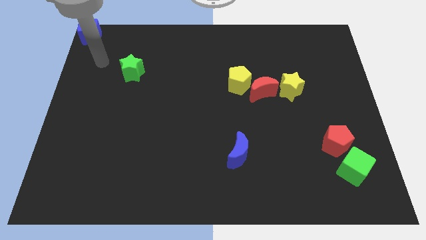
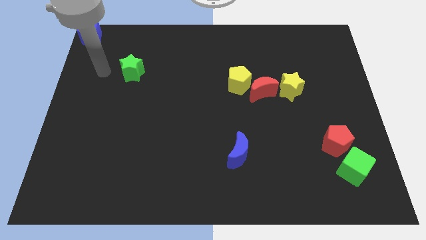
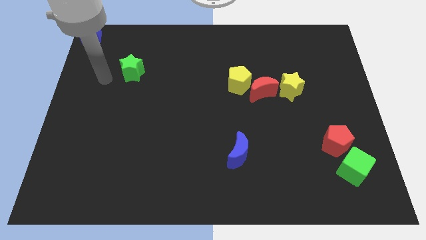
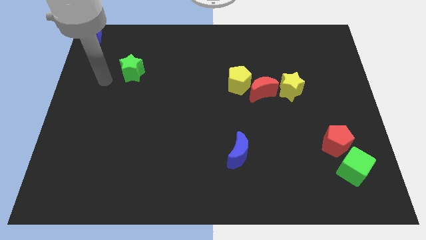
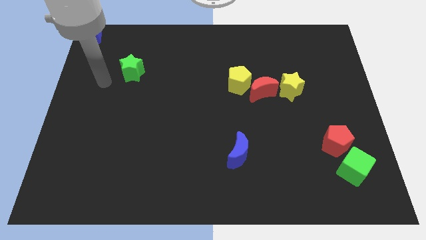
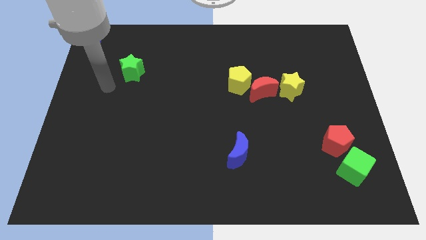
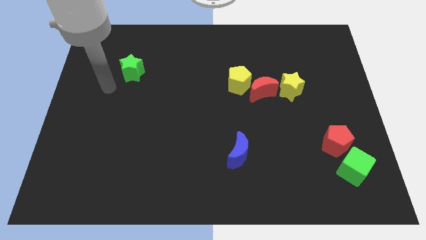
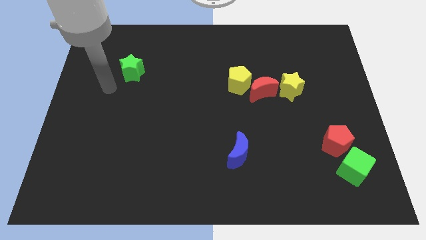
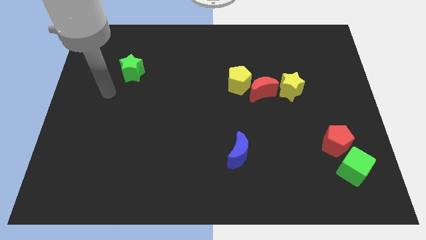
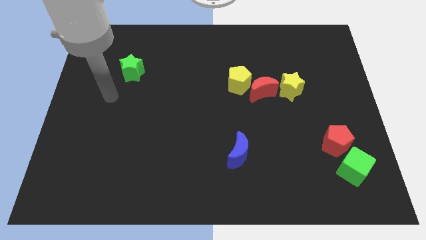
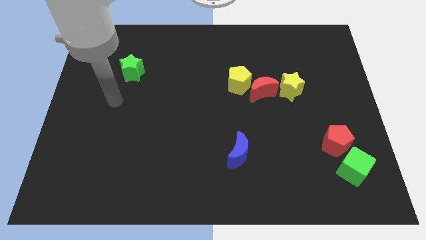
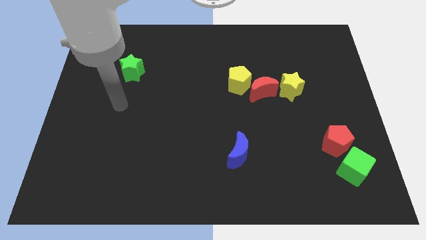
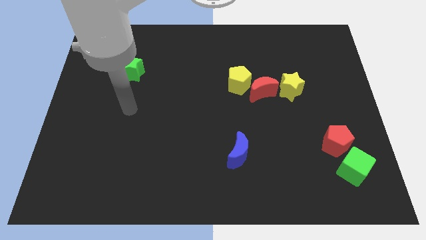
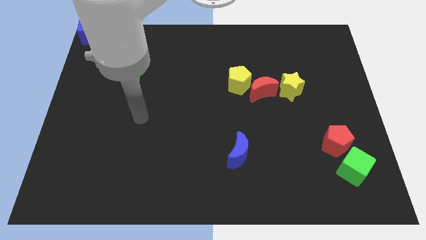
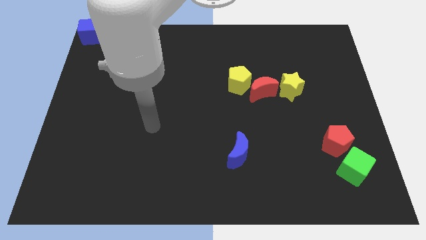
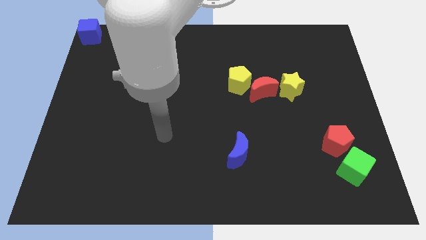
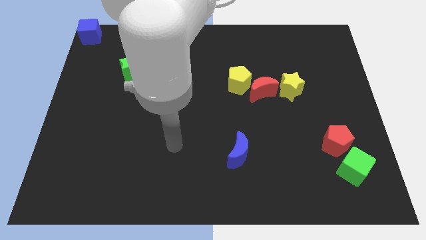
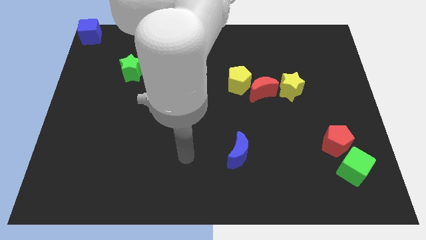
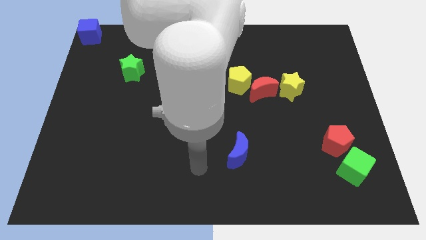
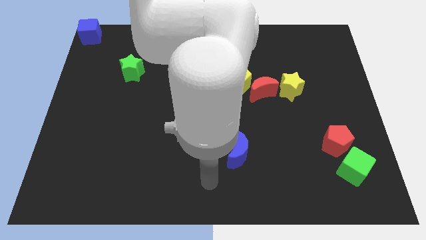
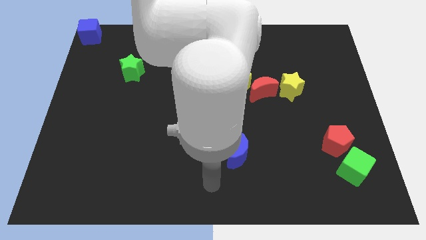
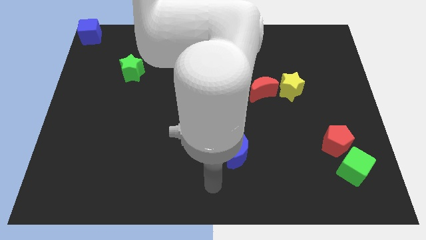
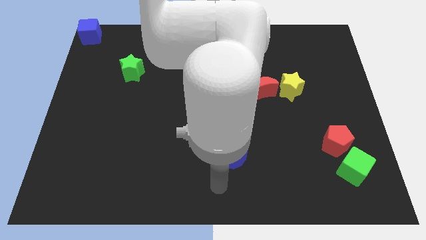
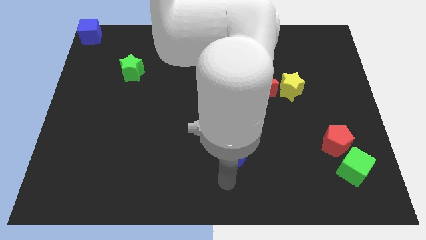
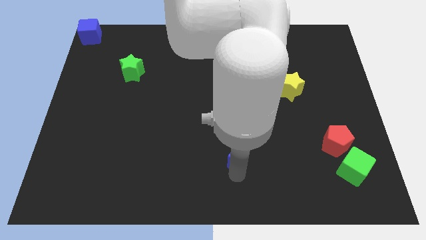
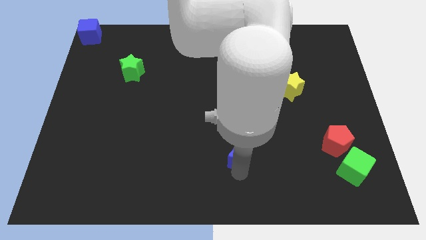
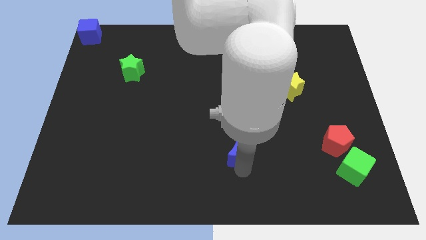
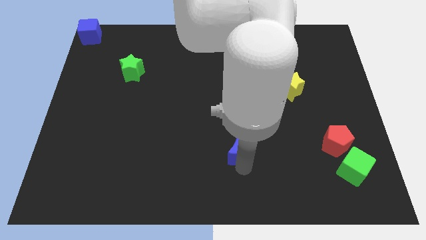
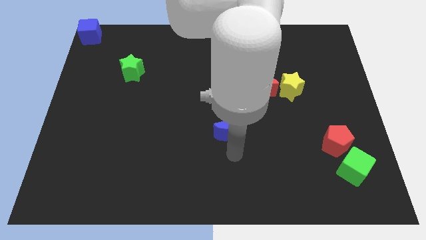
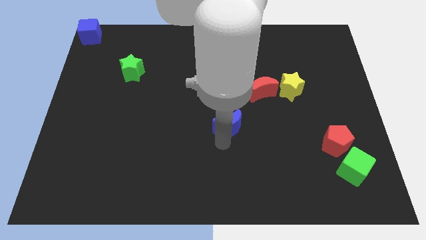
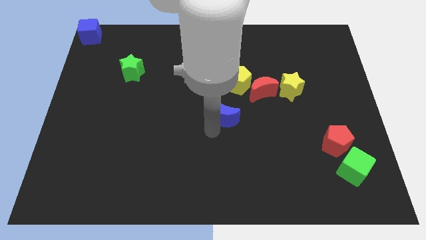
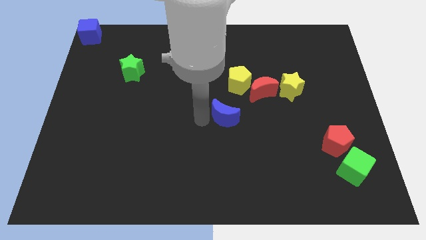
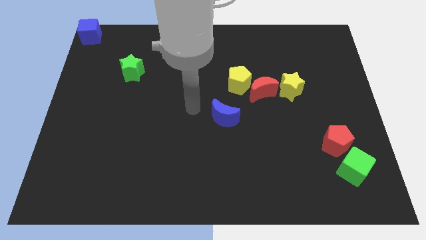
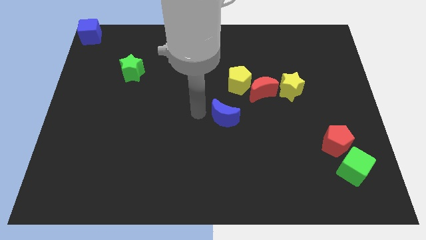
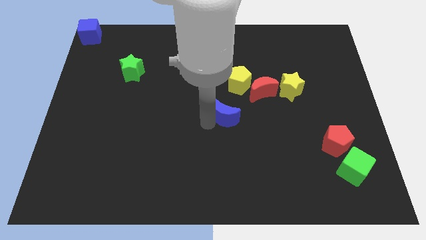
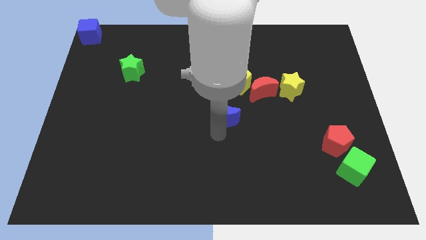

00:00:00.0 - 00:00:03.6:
drag the blue moon to the center

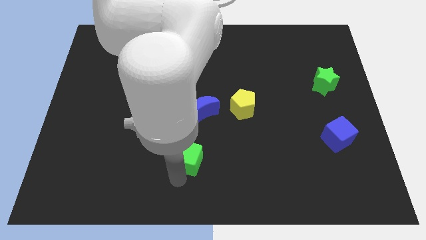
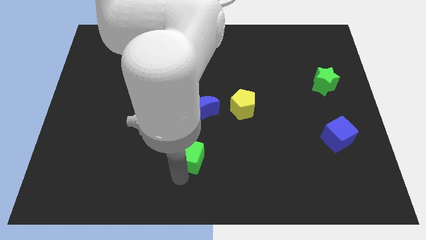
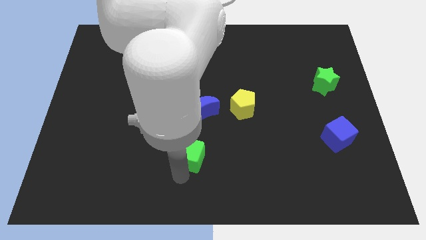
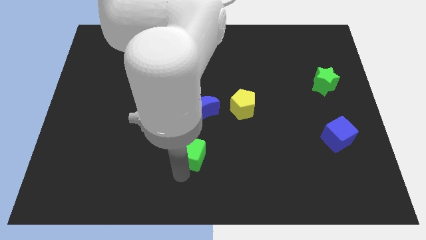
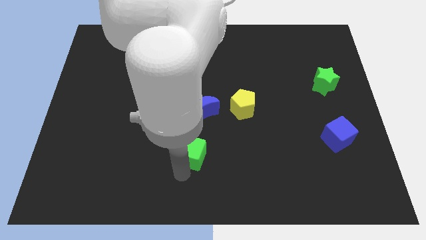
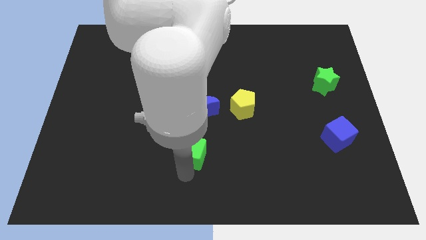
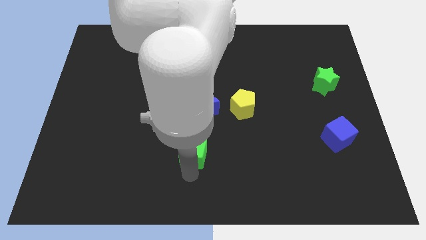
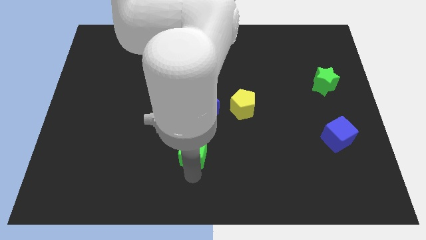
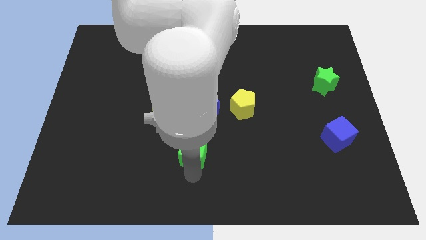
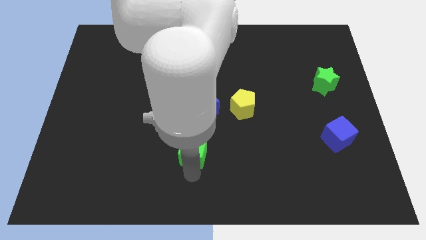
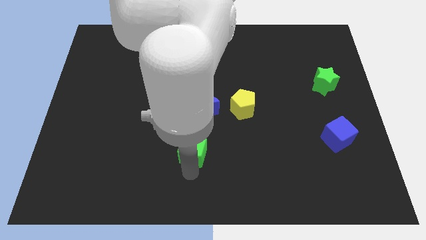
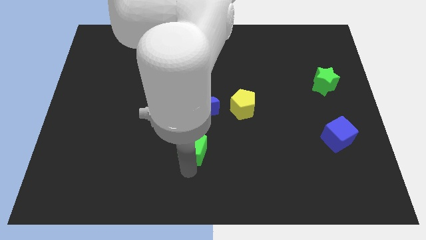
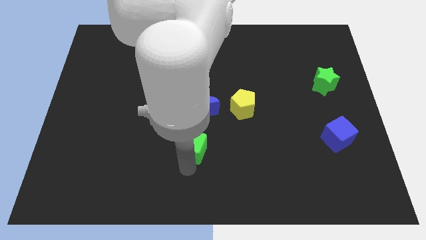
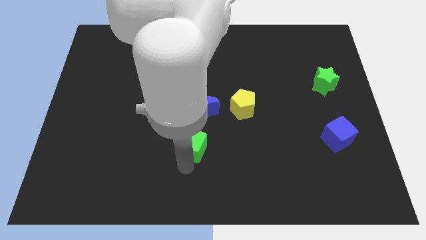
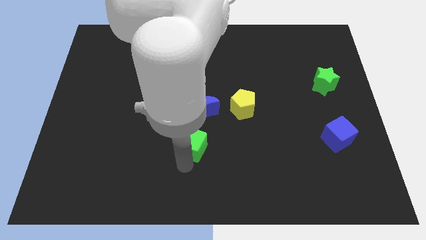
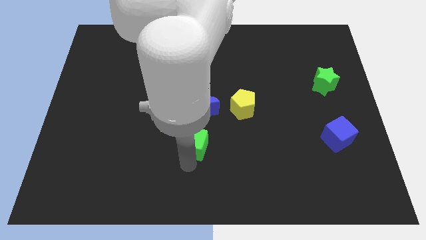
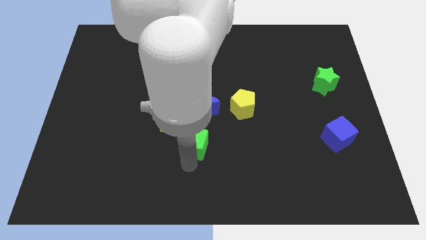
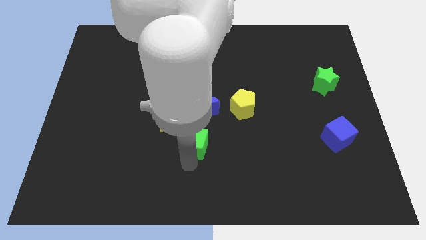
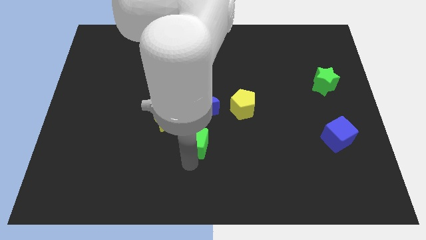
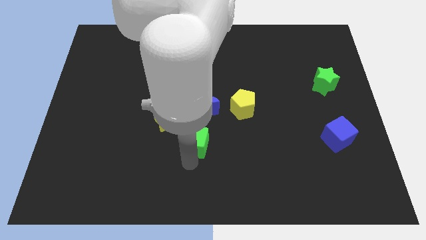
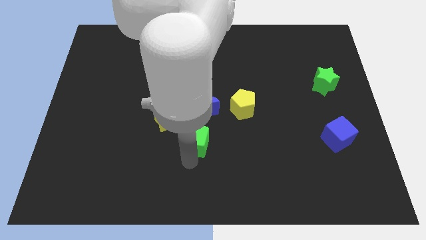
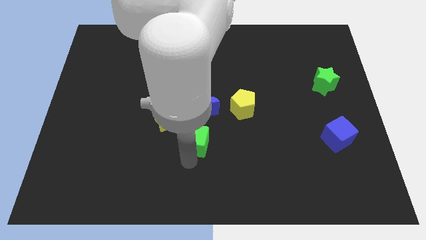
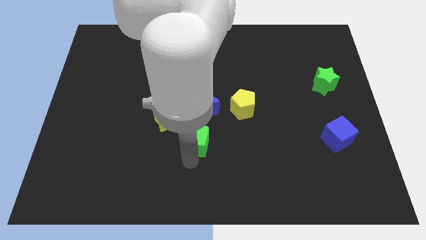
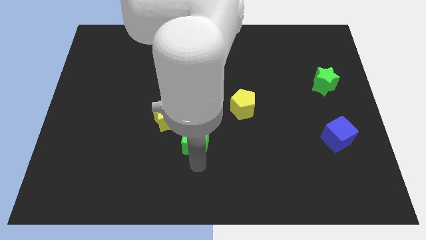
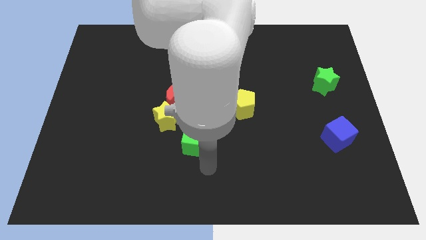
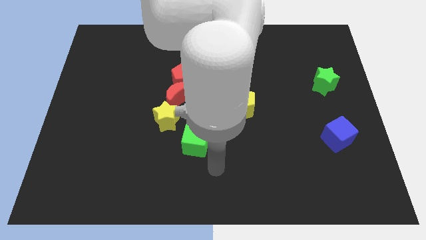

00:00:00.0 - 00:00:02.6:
push the green cube towards the down to blue crescent

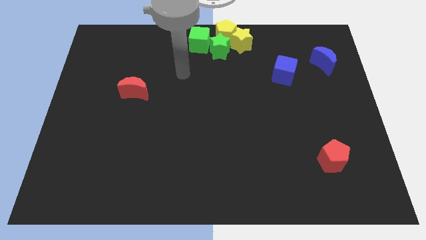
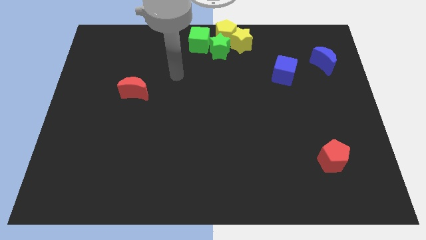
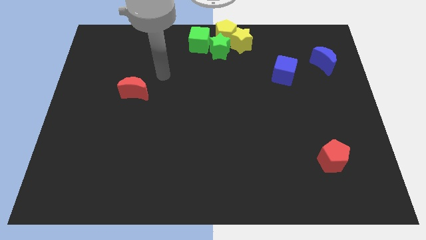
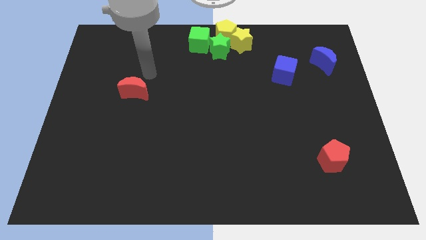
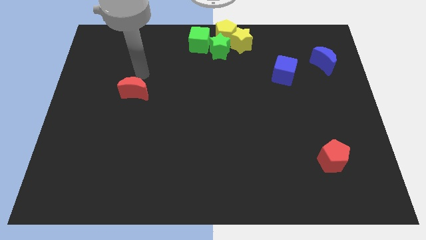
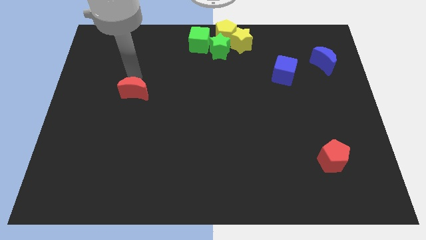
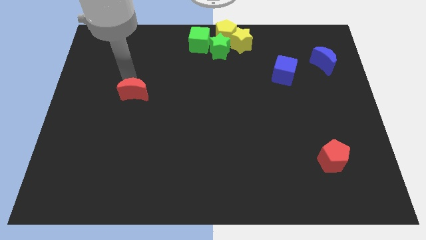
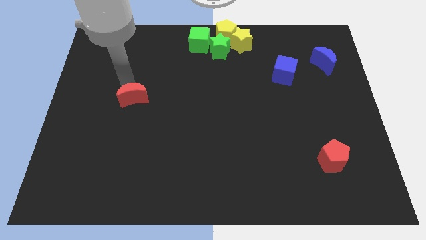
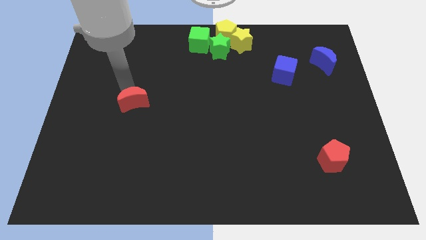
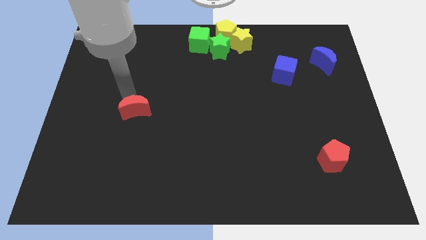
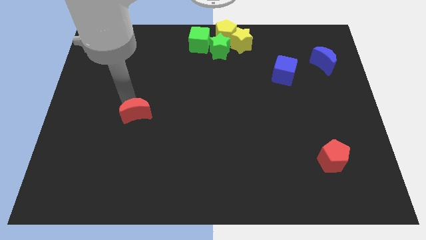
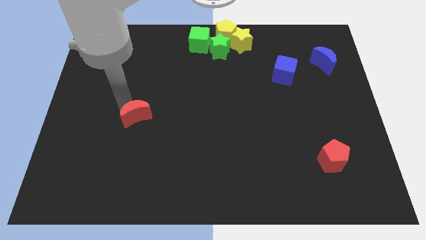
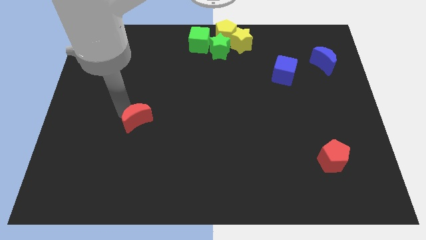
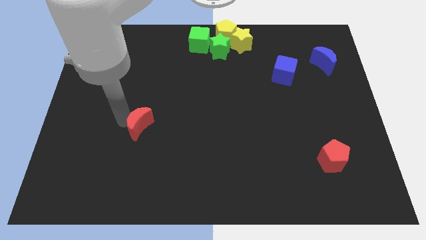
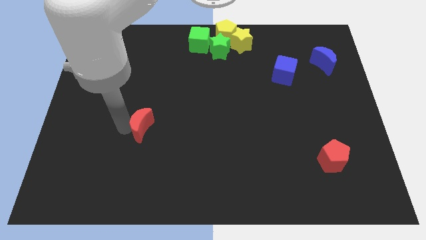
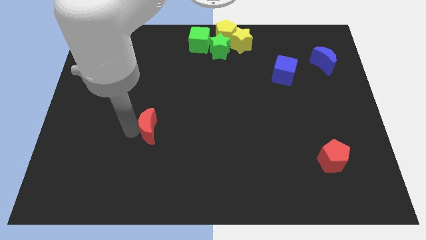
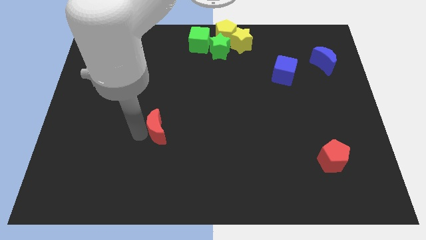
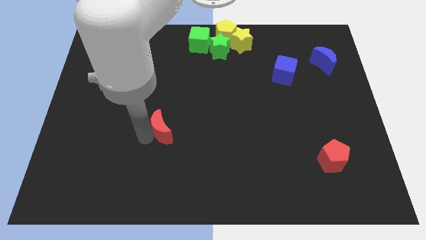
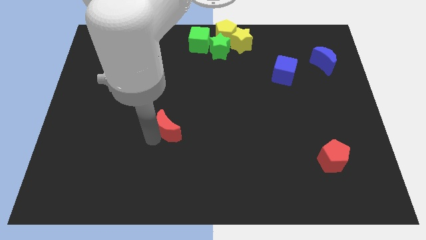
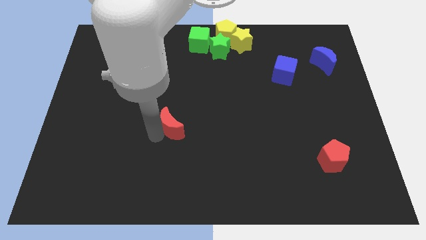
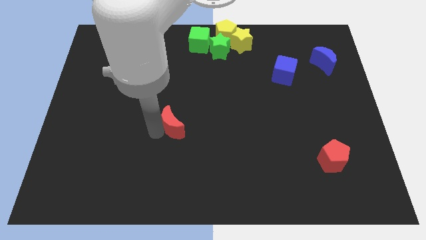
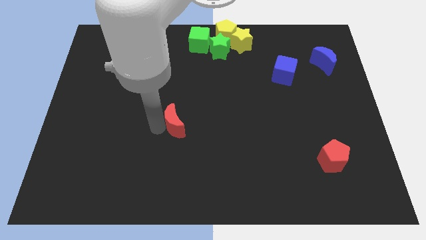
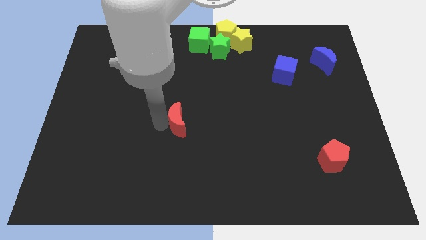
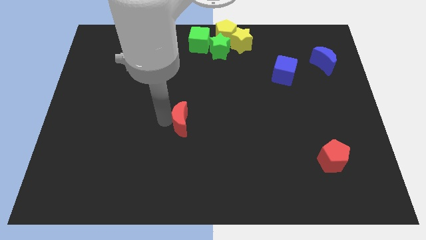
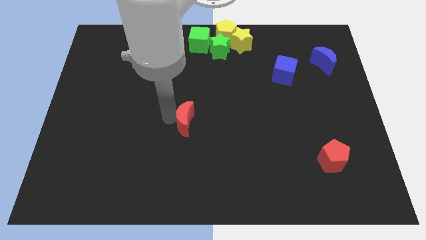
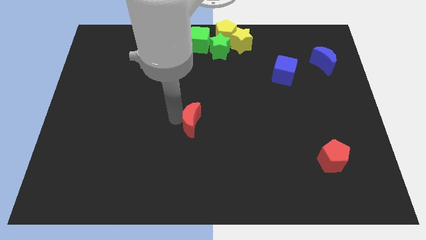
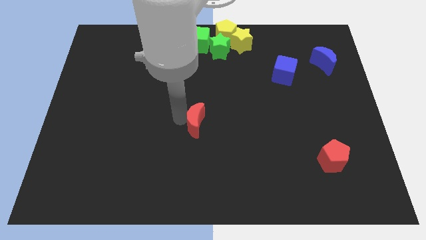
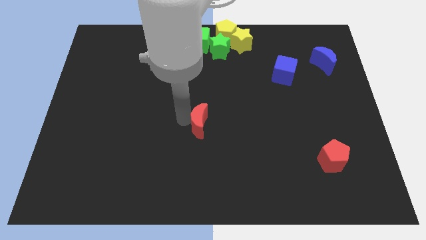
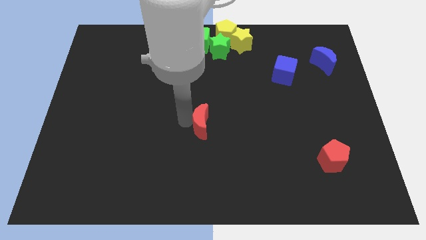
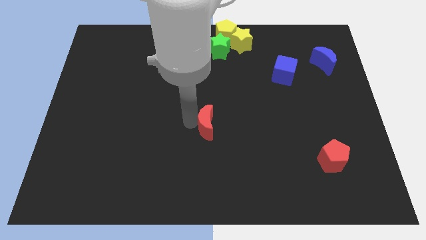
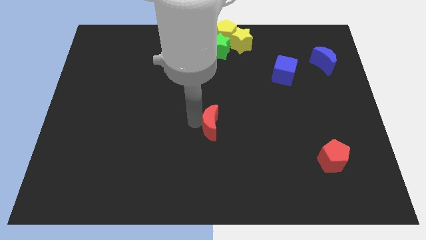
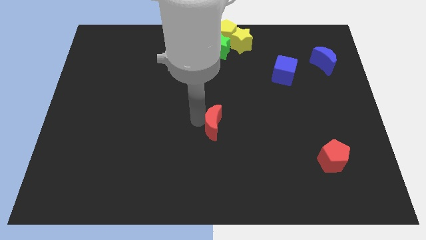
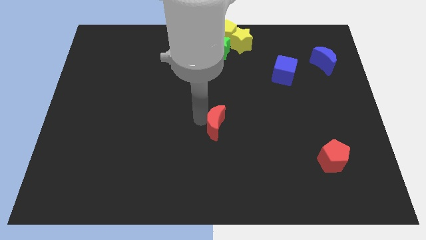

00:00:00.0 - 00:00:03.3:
slide the red moon to the center of the board
